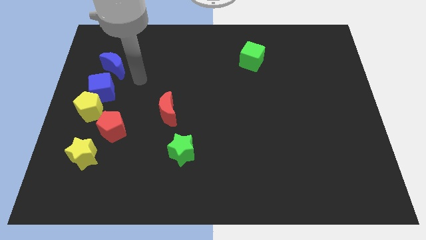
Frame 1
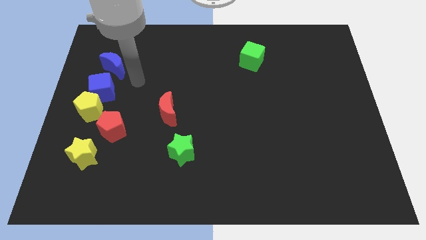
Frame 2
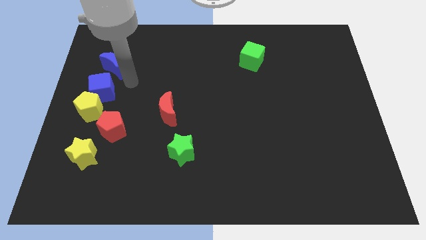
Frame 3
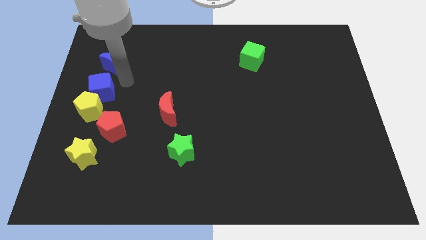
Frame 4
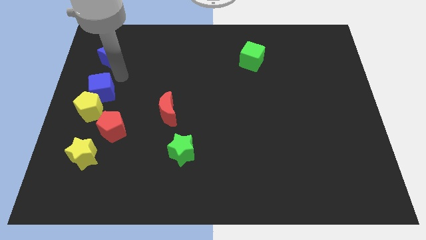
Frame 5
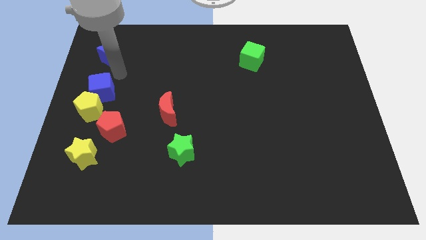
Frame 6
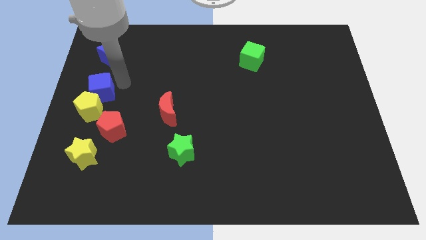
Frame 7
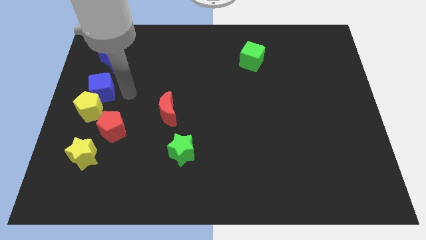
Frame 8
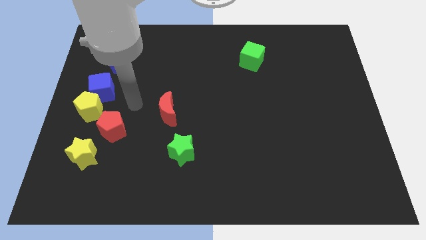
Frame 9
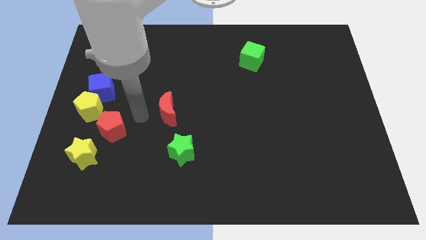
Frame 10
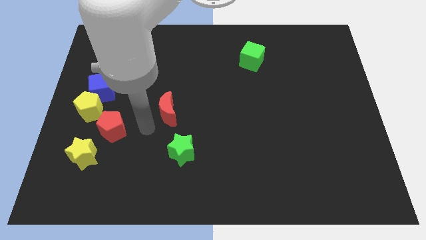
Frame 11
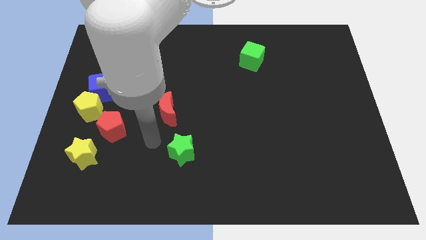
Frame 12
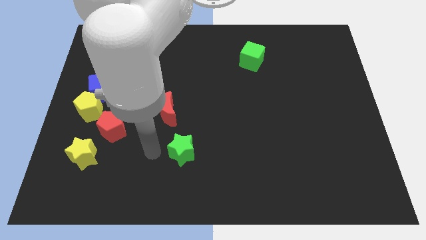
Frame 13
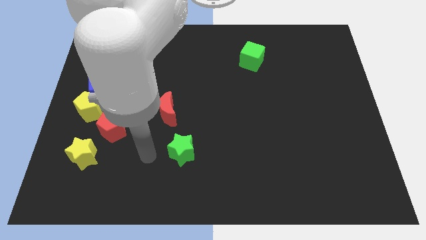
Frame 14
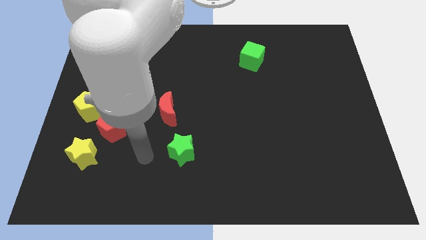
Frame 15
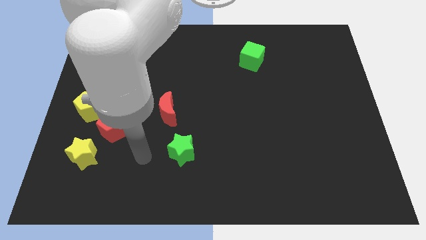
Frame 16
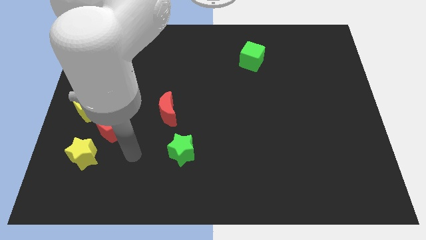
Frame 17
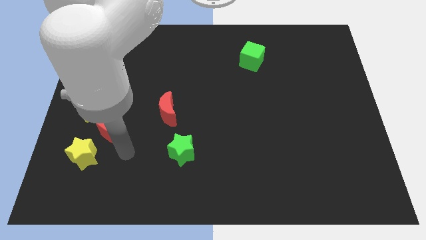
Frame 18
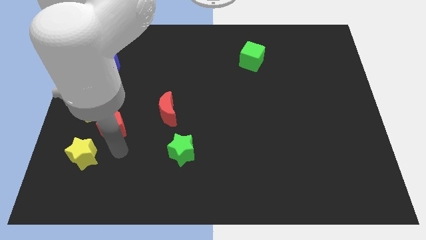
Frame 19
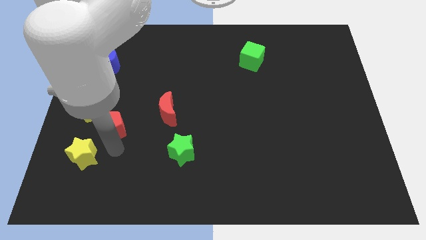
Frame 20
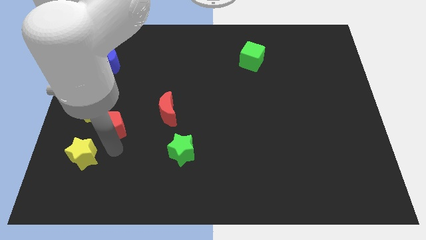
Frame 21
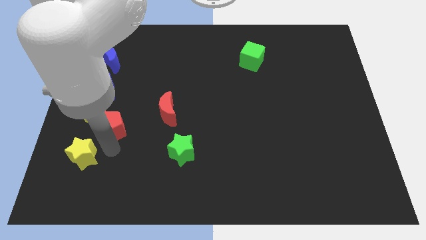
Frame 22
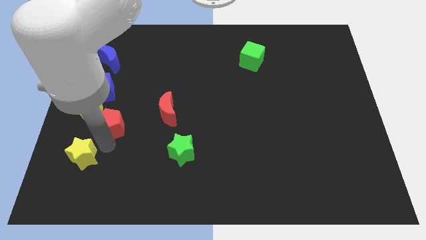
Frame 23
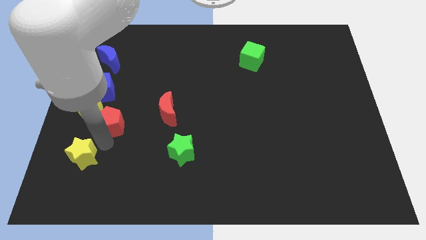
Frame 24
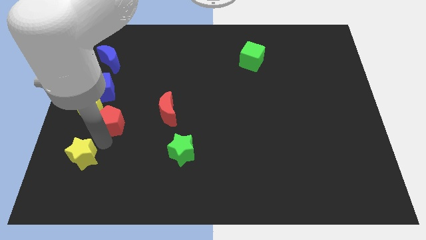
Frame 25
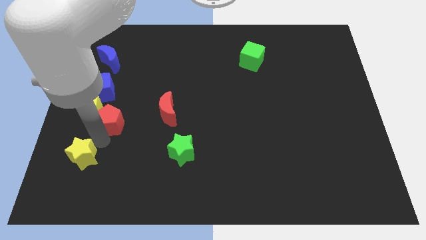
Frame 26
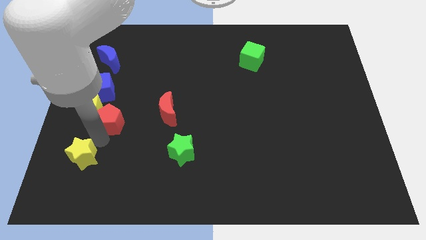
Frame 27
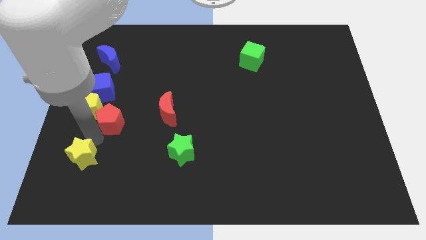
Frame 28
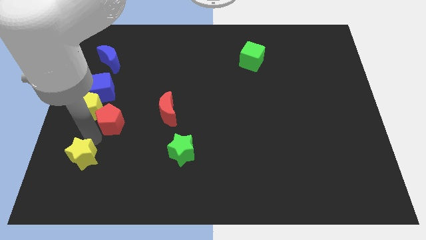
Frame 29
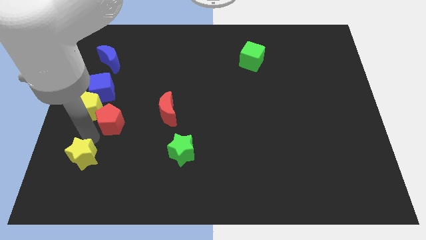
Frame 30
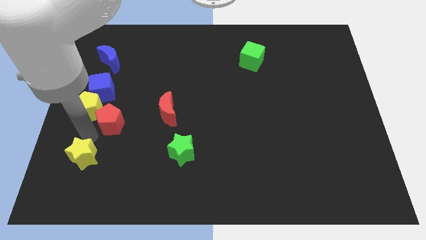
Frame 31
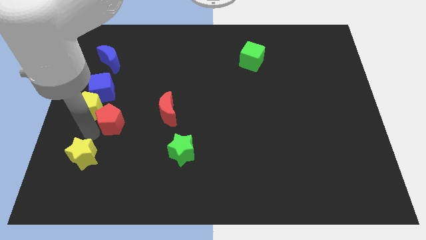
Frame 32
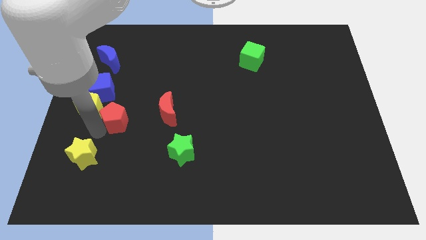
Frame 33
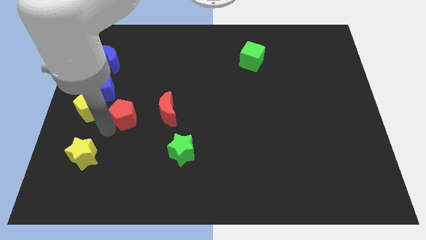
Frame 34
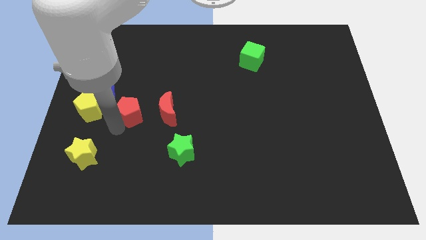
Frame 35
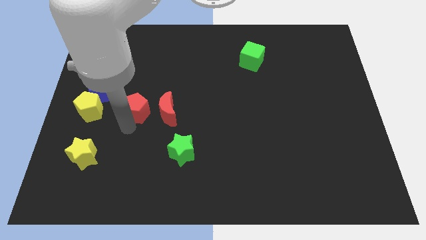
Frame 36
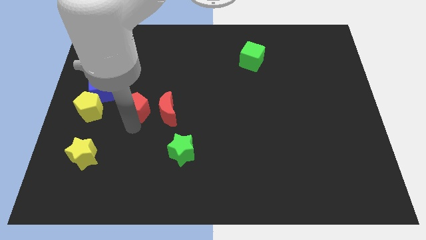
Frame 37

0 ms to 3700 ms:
place the red pentagon in between the red moon and yellow pentagon

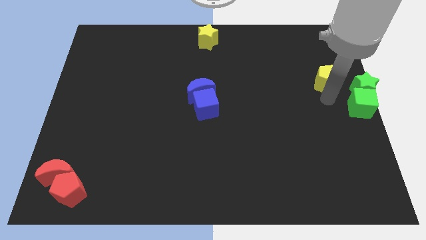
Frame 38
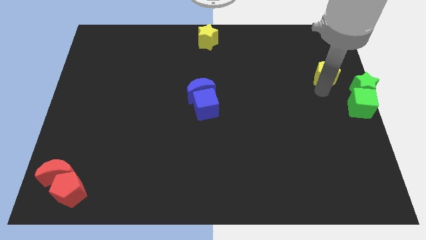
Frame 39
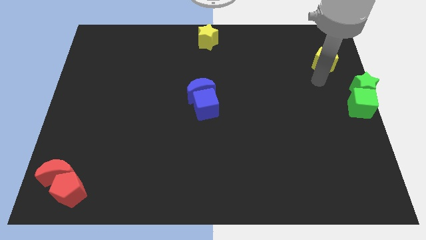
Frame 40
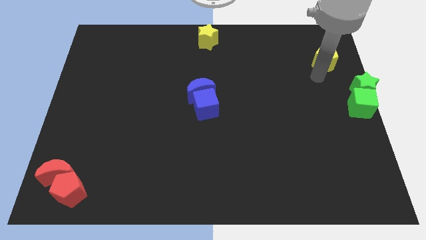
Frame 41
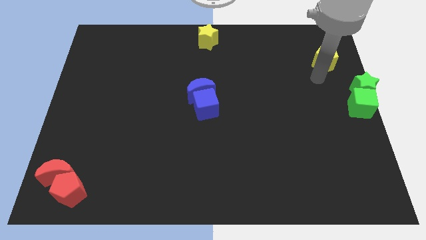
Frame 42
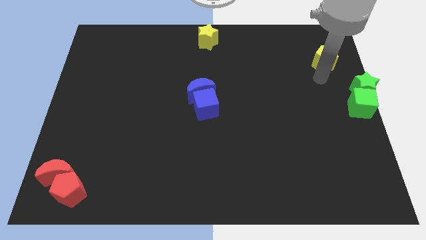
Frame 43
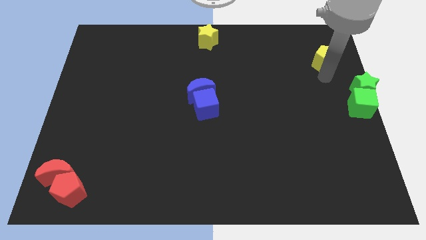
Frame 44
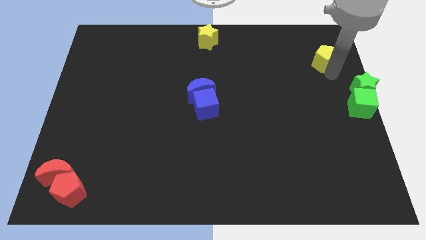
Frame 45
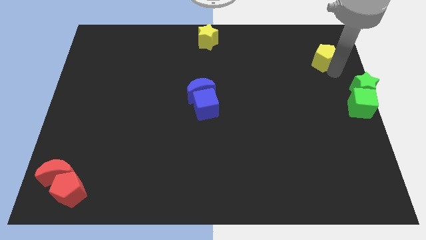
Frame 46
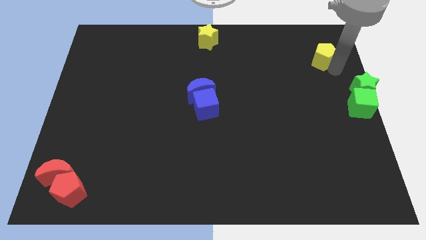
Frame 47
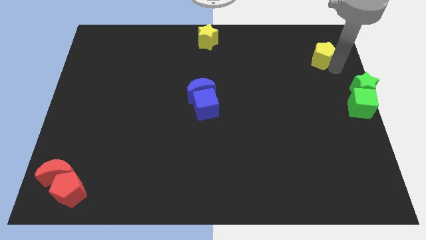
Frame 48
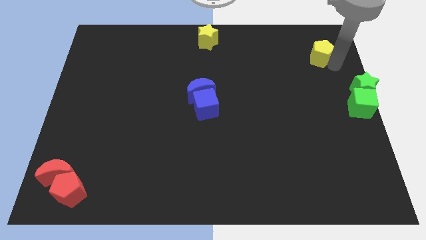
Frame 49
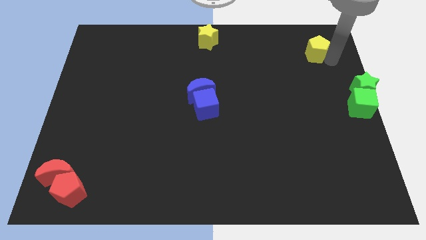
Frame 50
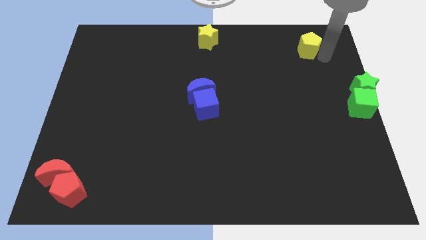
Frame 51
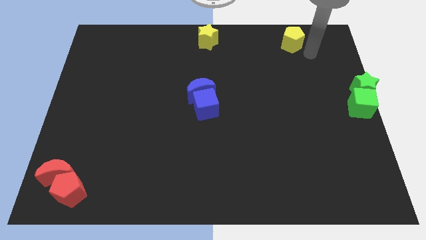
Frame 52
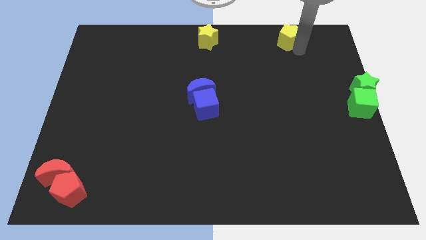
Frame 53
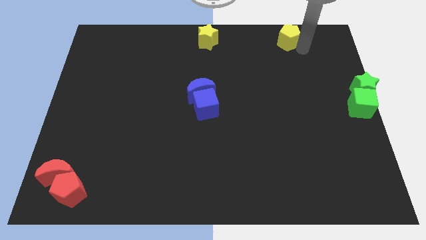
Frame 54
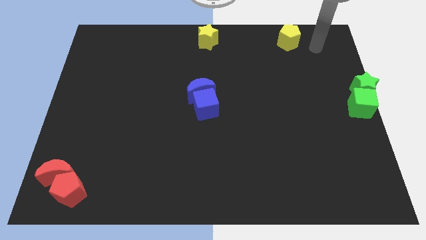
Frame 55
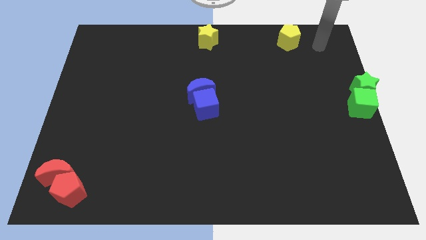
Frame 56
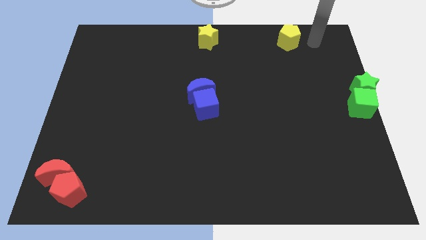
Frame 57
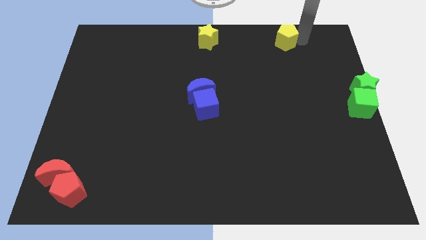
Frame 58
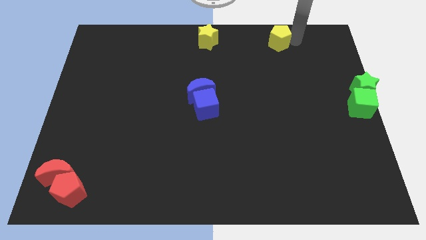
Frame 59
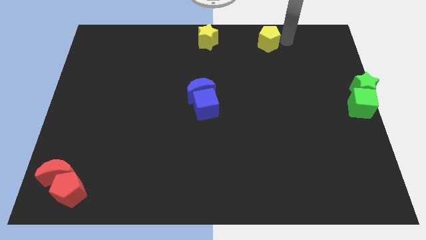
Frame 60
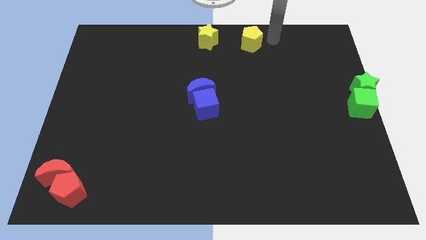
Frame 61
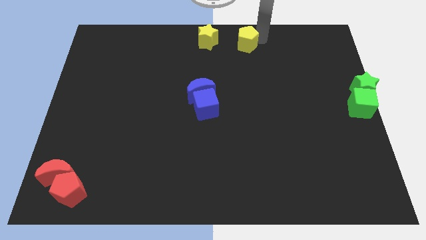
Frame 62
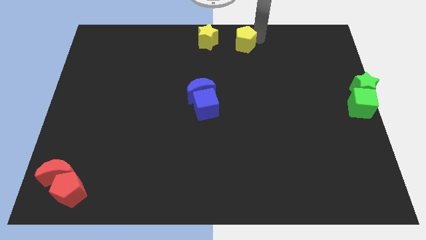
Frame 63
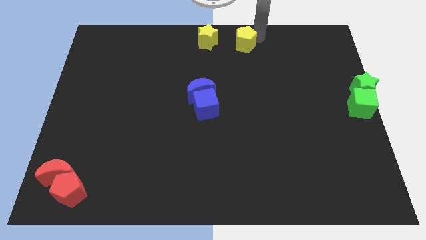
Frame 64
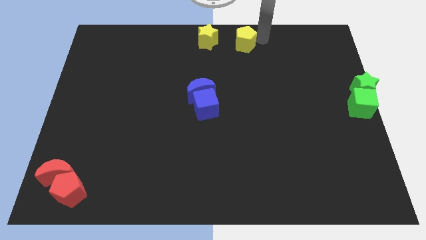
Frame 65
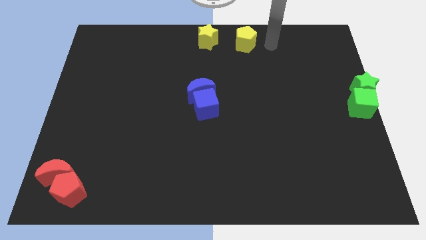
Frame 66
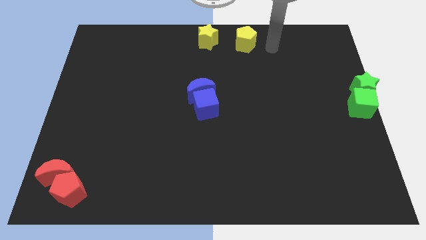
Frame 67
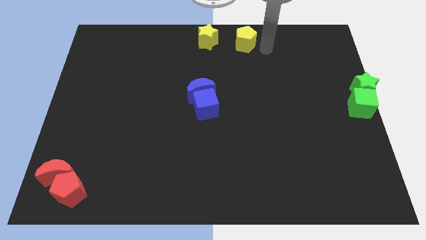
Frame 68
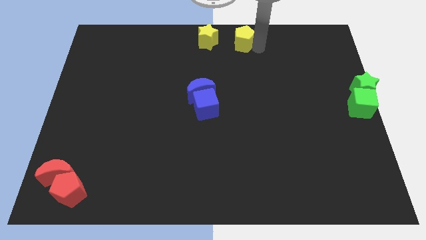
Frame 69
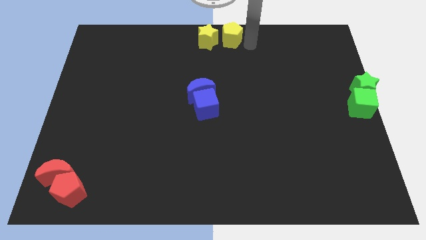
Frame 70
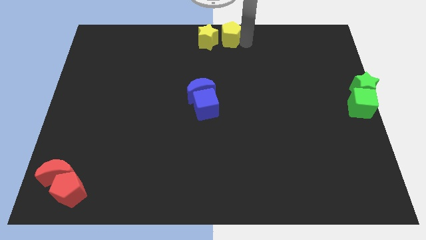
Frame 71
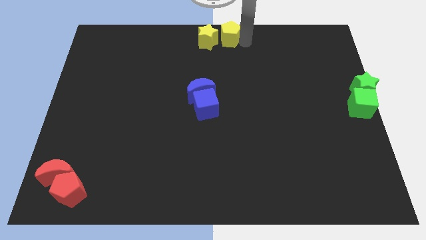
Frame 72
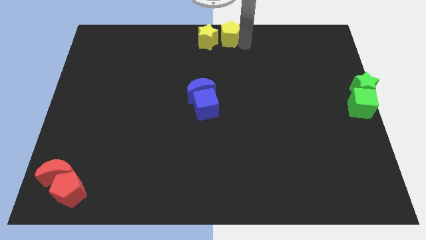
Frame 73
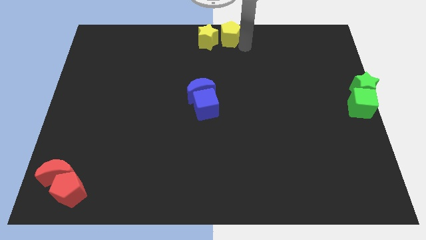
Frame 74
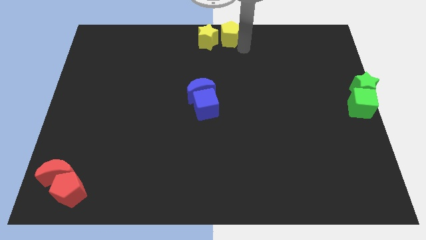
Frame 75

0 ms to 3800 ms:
slide the yellow pentagon to the right side of the yellow star

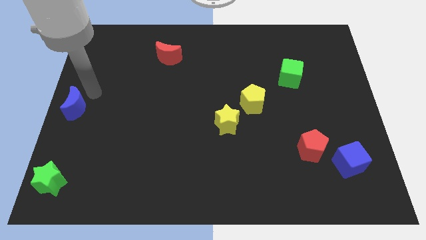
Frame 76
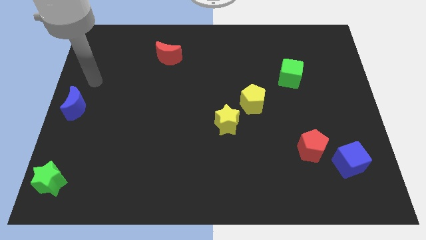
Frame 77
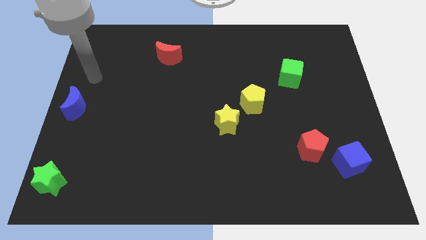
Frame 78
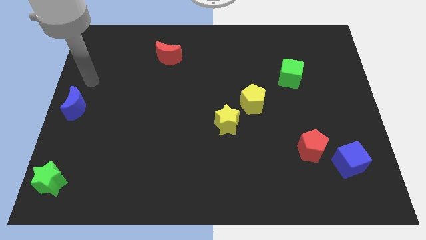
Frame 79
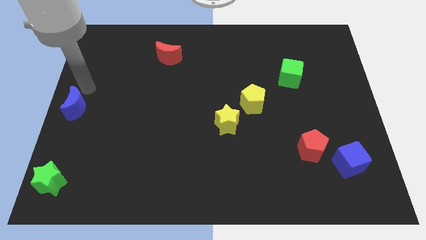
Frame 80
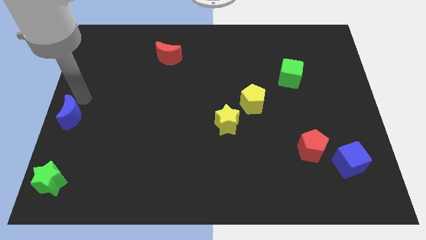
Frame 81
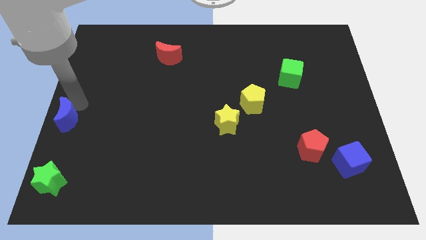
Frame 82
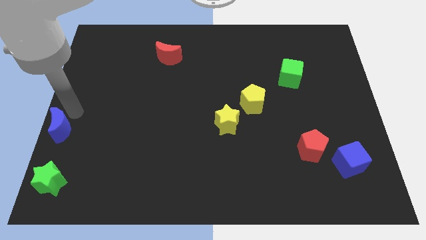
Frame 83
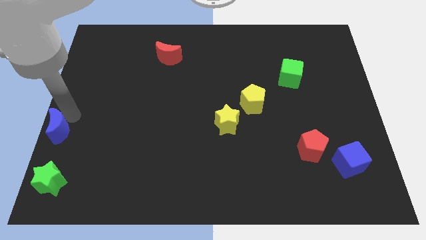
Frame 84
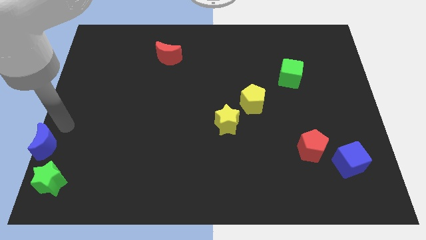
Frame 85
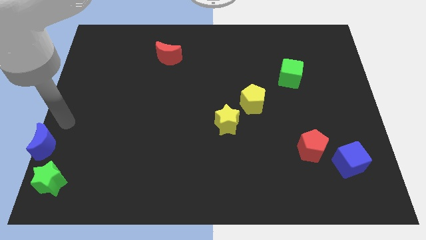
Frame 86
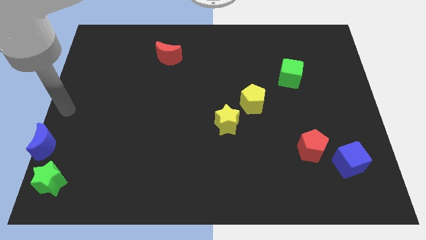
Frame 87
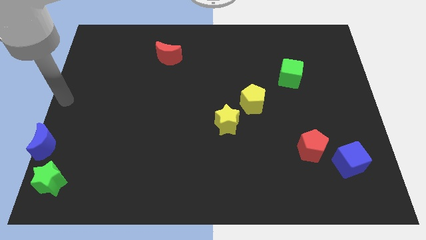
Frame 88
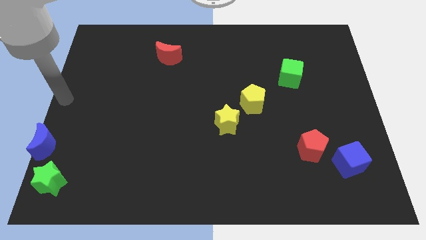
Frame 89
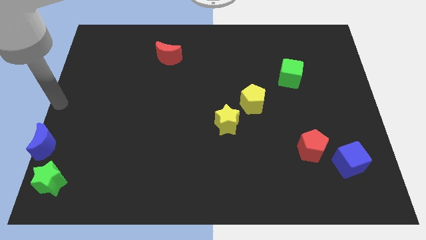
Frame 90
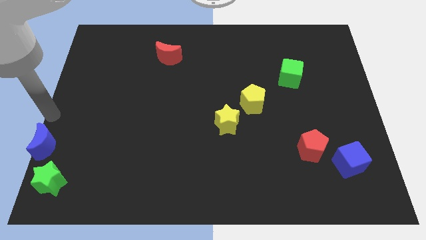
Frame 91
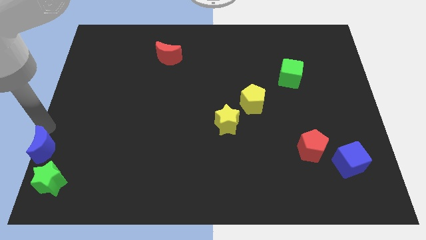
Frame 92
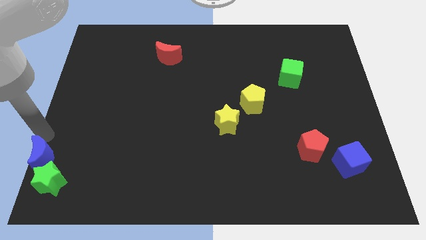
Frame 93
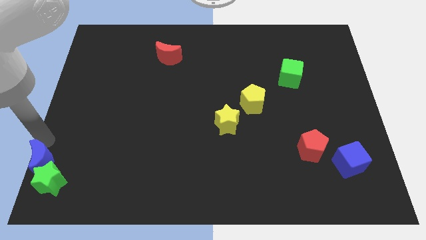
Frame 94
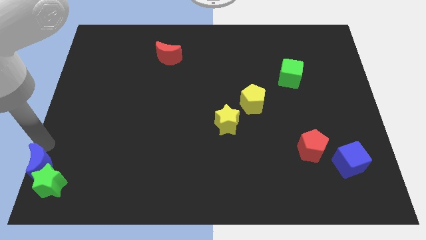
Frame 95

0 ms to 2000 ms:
push the blue moon into the green star
